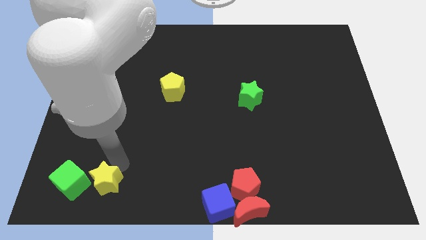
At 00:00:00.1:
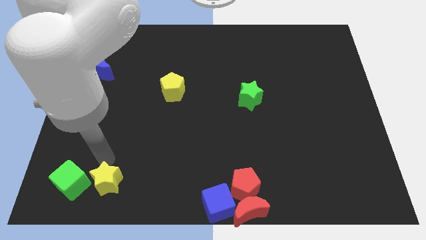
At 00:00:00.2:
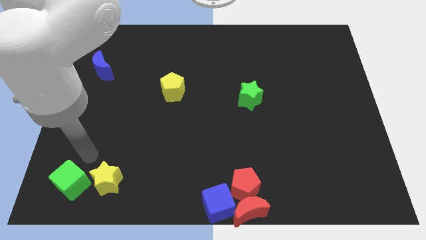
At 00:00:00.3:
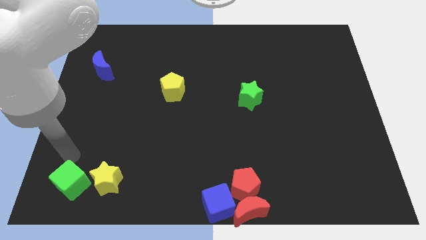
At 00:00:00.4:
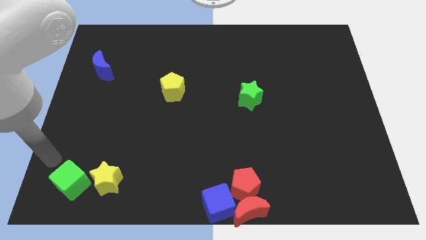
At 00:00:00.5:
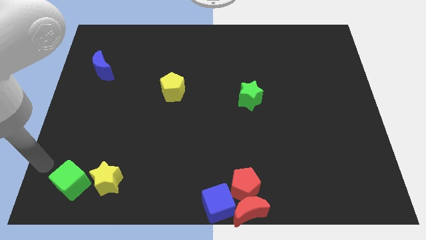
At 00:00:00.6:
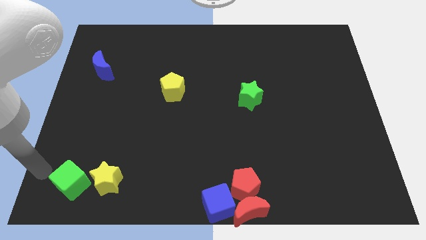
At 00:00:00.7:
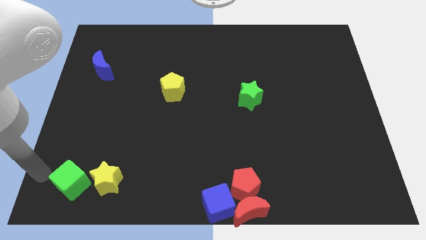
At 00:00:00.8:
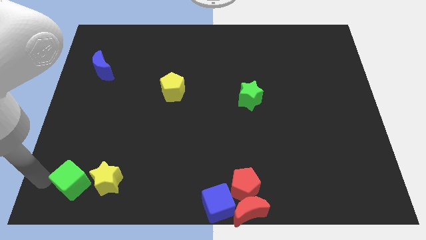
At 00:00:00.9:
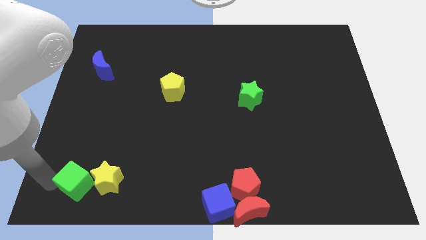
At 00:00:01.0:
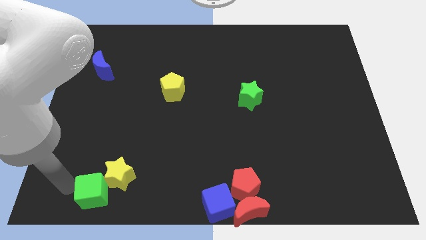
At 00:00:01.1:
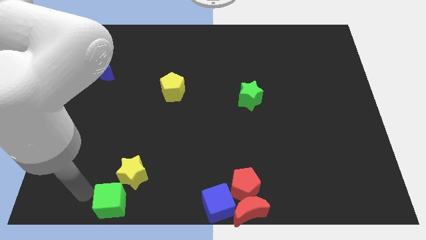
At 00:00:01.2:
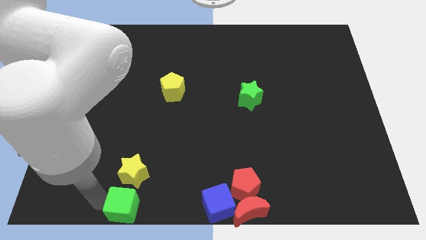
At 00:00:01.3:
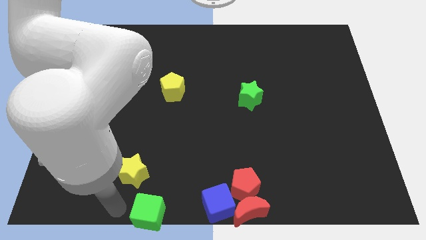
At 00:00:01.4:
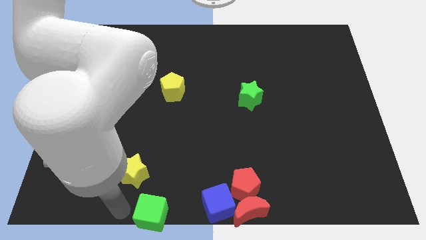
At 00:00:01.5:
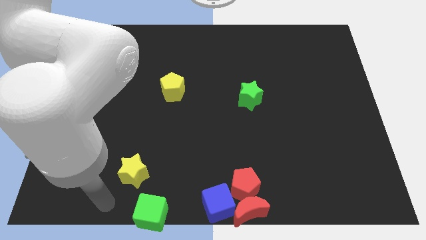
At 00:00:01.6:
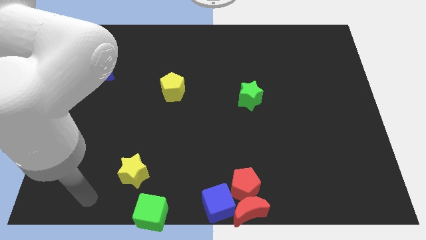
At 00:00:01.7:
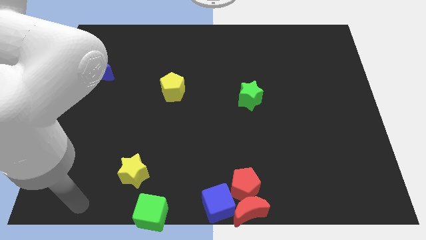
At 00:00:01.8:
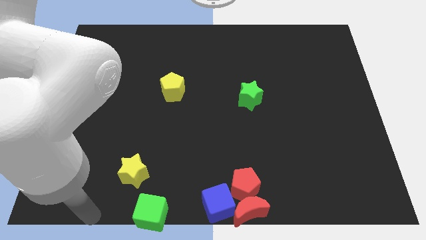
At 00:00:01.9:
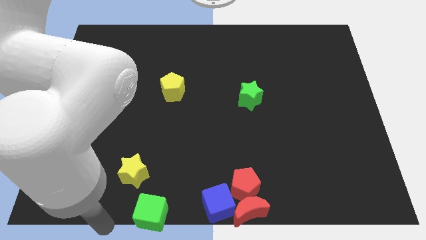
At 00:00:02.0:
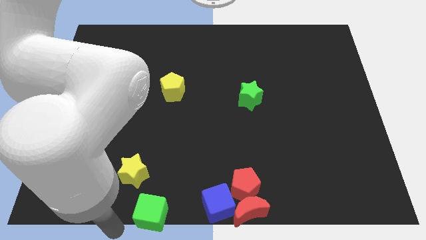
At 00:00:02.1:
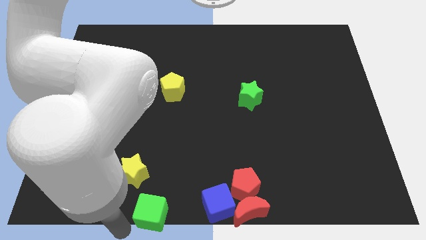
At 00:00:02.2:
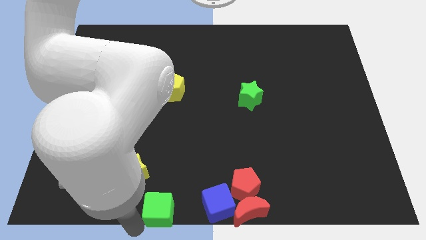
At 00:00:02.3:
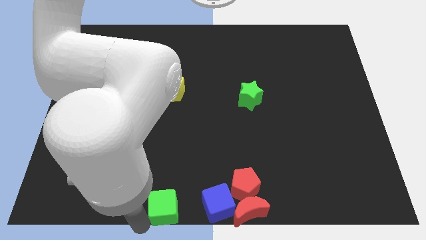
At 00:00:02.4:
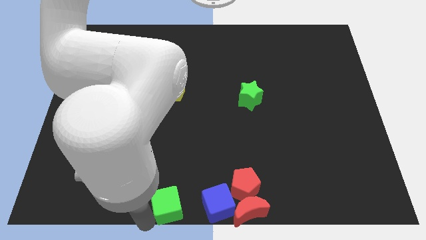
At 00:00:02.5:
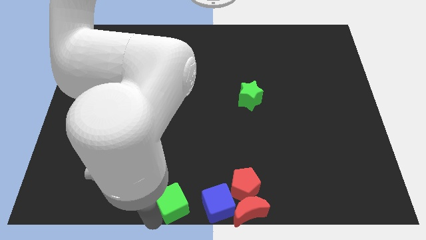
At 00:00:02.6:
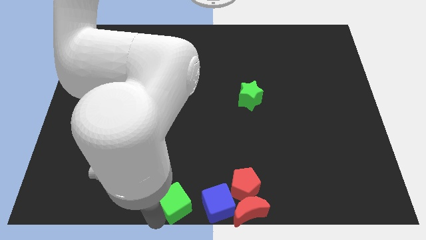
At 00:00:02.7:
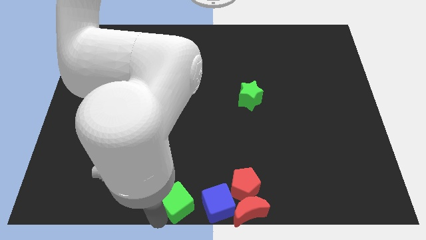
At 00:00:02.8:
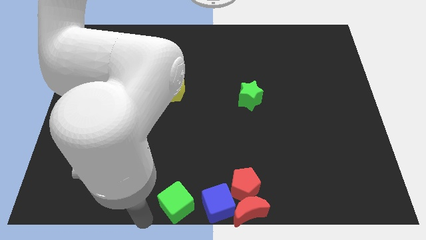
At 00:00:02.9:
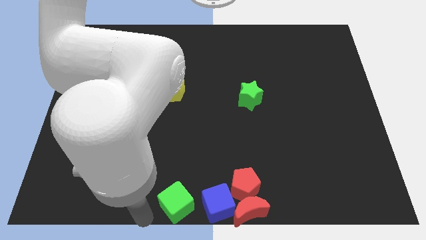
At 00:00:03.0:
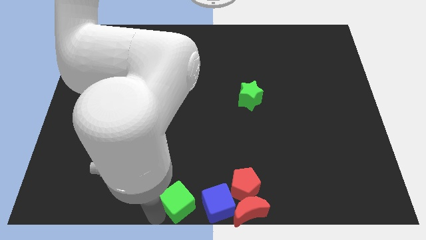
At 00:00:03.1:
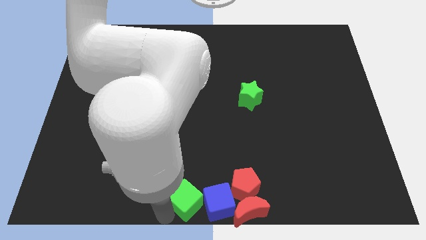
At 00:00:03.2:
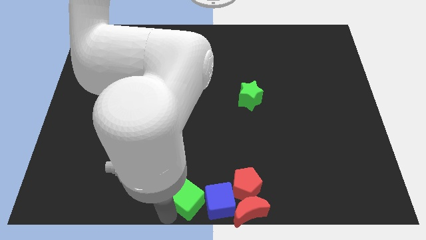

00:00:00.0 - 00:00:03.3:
push the green cube to the left of the blue cube

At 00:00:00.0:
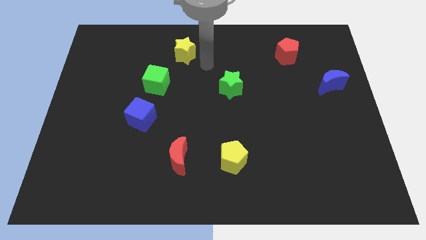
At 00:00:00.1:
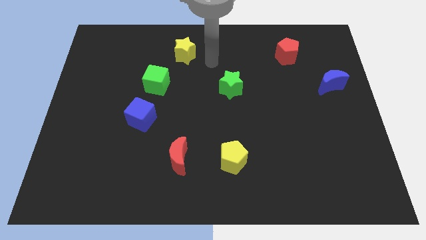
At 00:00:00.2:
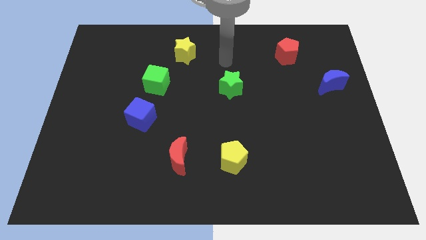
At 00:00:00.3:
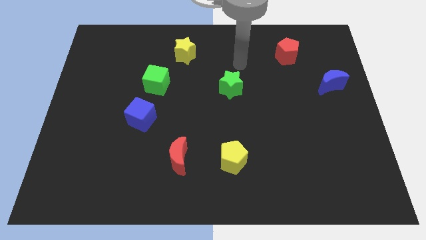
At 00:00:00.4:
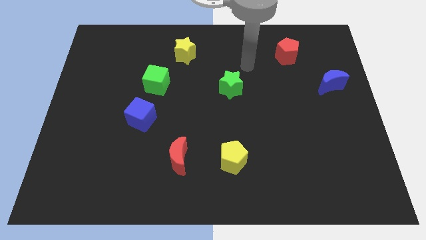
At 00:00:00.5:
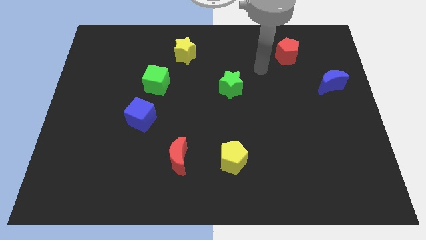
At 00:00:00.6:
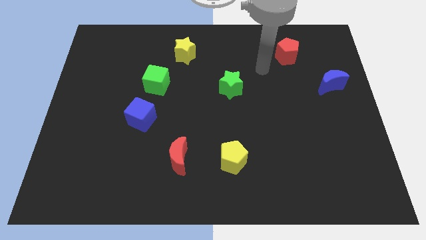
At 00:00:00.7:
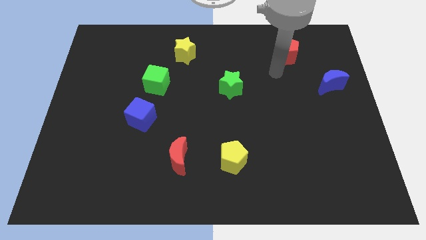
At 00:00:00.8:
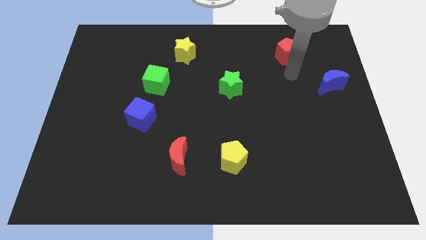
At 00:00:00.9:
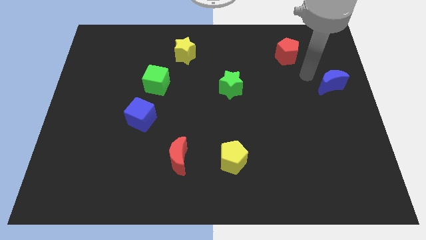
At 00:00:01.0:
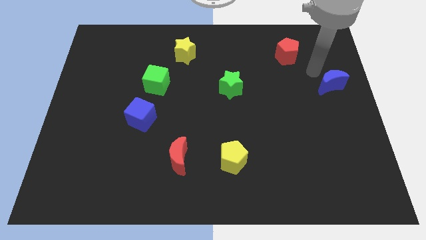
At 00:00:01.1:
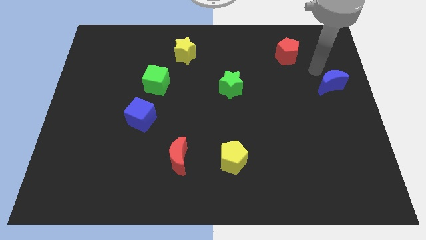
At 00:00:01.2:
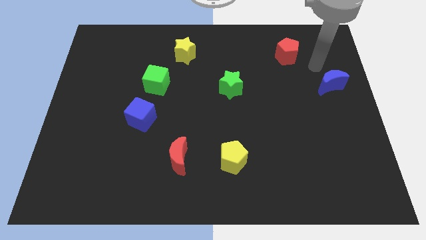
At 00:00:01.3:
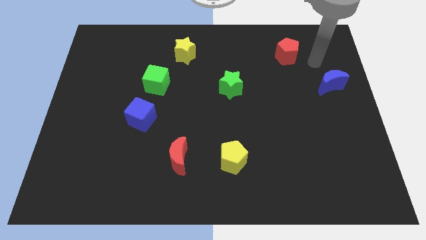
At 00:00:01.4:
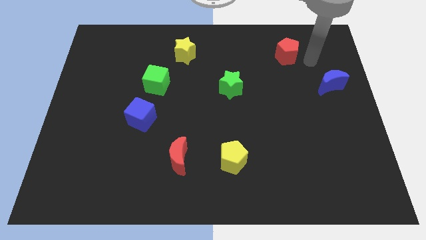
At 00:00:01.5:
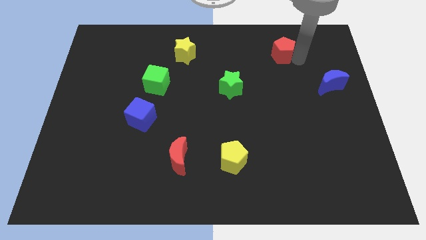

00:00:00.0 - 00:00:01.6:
tap the red pentagon

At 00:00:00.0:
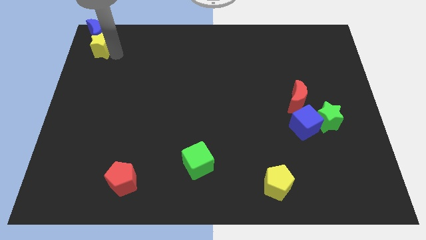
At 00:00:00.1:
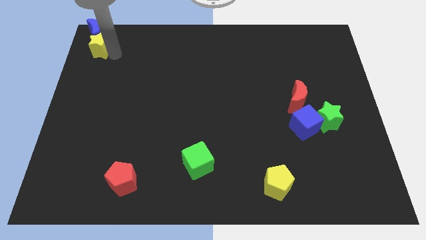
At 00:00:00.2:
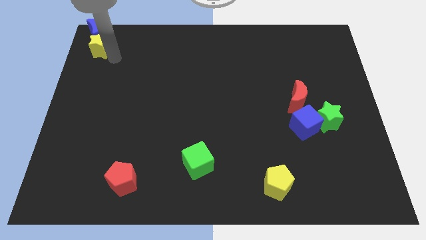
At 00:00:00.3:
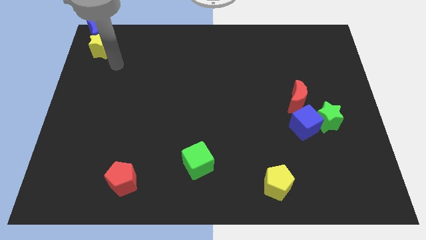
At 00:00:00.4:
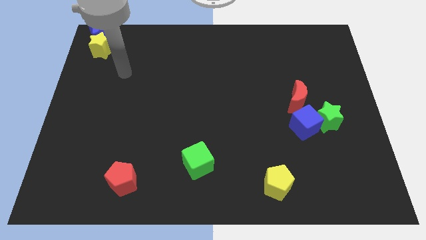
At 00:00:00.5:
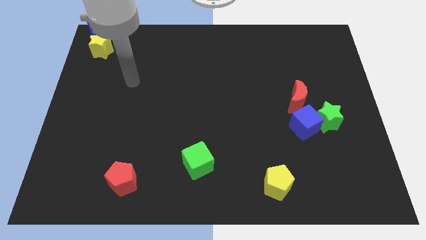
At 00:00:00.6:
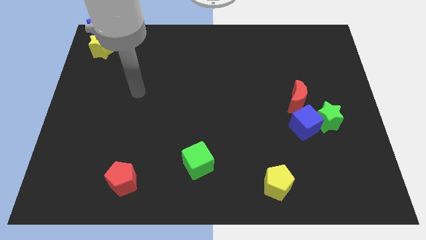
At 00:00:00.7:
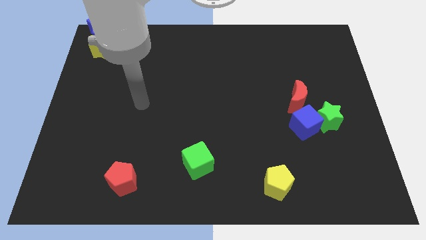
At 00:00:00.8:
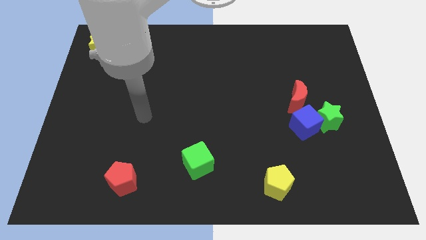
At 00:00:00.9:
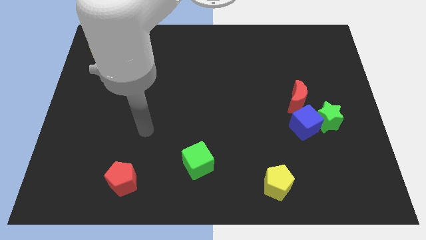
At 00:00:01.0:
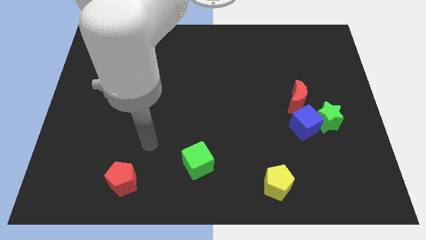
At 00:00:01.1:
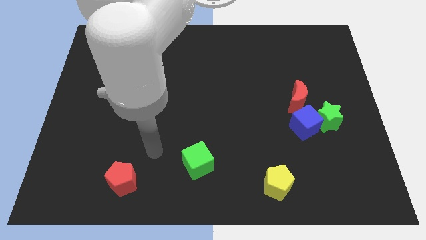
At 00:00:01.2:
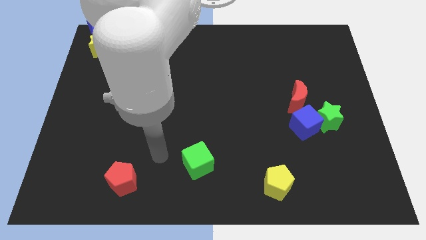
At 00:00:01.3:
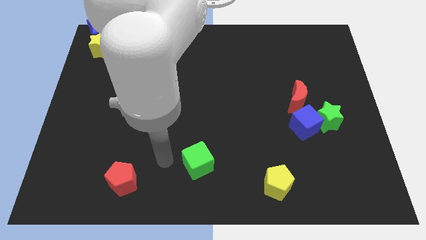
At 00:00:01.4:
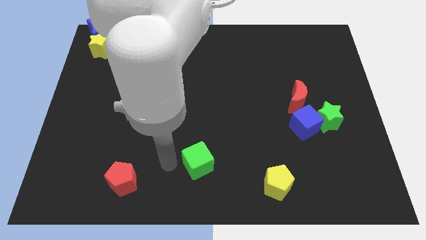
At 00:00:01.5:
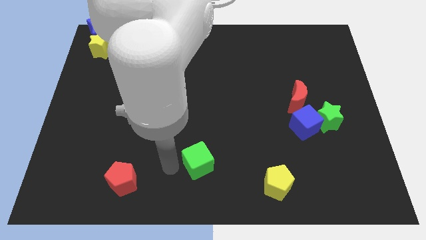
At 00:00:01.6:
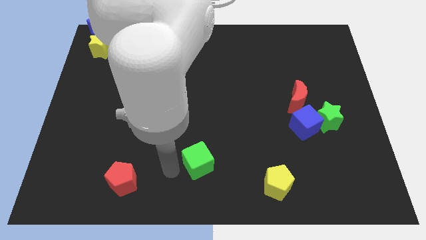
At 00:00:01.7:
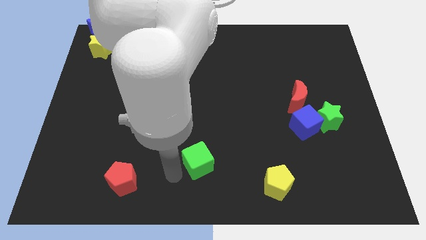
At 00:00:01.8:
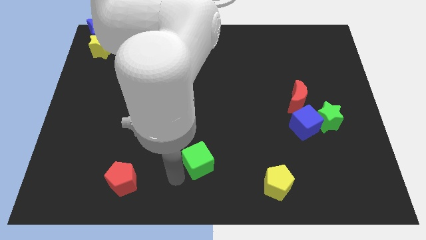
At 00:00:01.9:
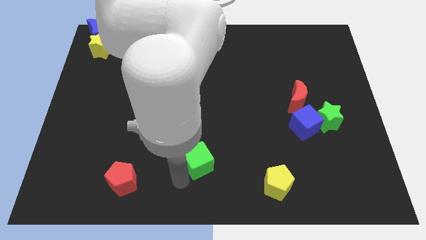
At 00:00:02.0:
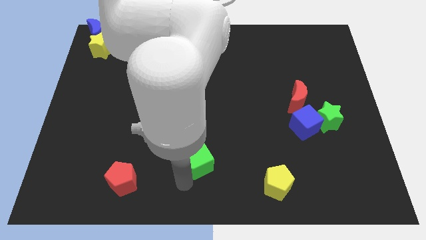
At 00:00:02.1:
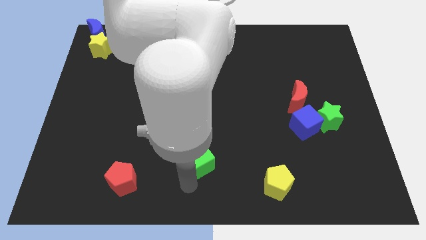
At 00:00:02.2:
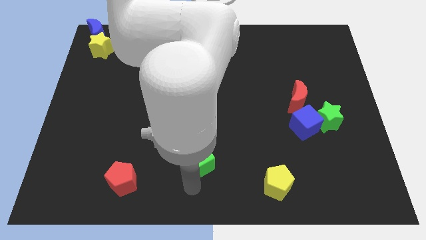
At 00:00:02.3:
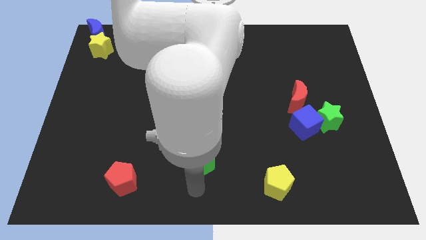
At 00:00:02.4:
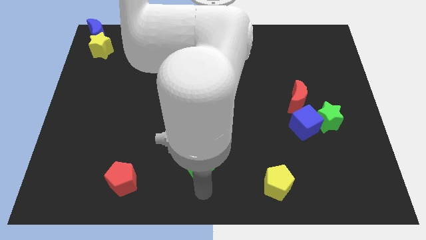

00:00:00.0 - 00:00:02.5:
move the arm to the bottom of the blue cube

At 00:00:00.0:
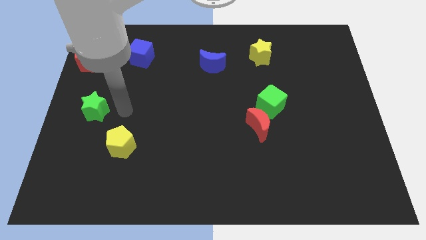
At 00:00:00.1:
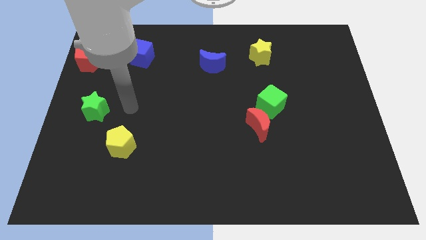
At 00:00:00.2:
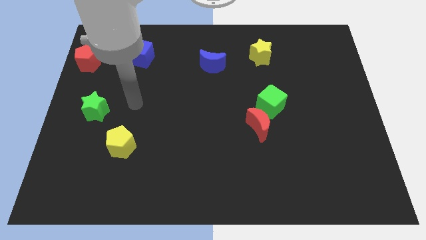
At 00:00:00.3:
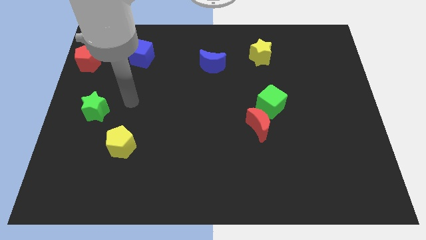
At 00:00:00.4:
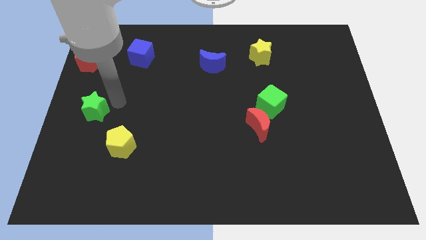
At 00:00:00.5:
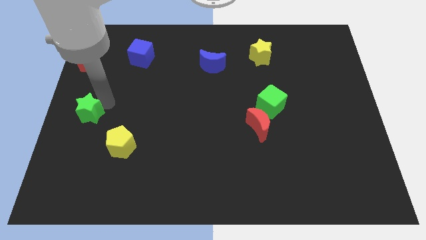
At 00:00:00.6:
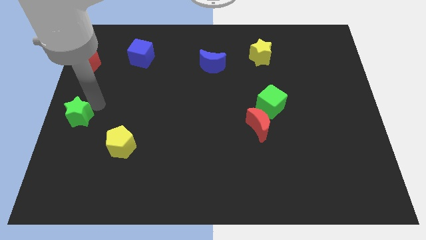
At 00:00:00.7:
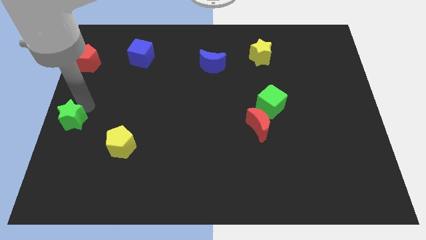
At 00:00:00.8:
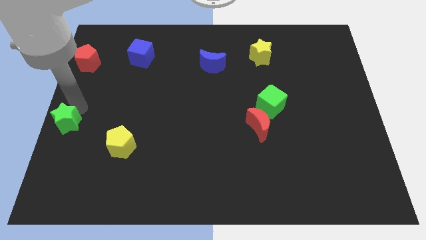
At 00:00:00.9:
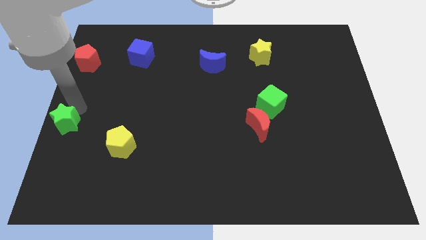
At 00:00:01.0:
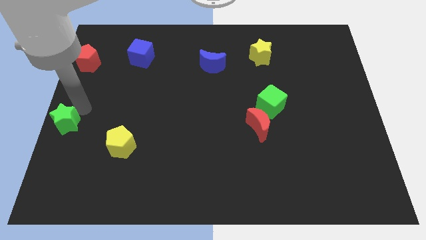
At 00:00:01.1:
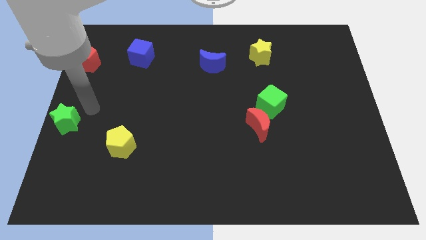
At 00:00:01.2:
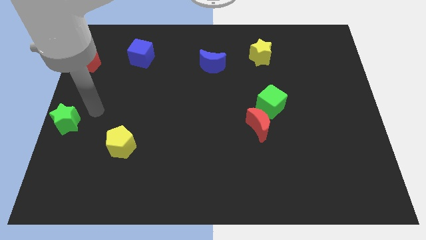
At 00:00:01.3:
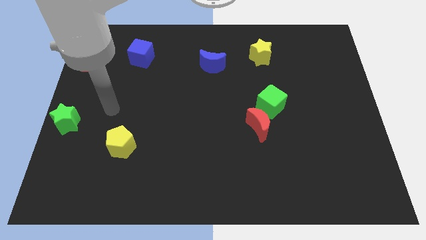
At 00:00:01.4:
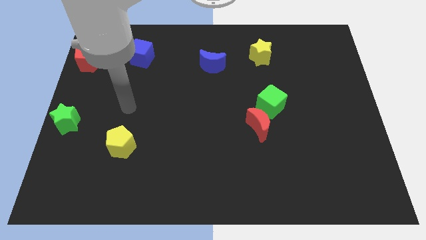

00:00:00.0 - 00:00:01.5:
move the green star to the left center of the board
